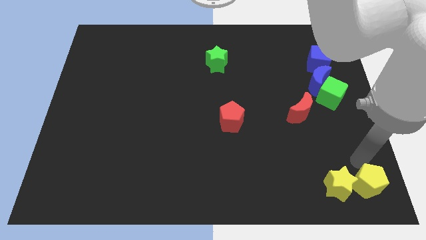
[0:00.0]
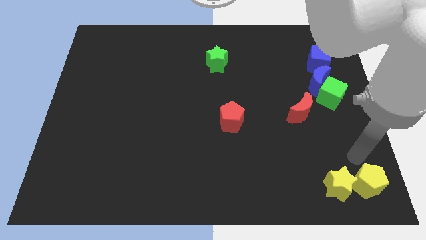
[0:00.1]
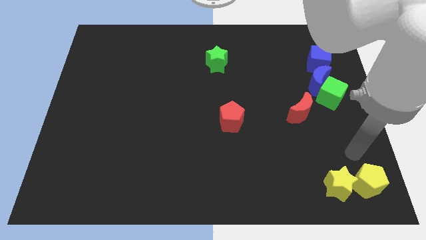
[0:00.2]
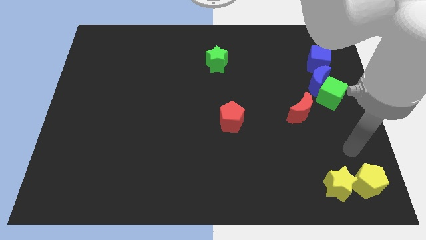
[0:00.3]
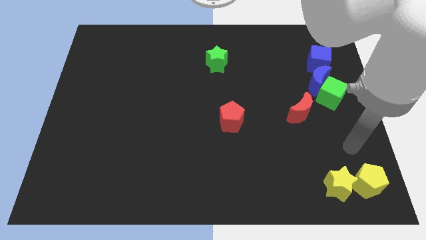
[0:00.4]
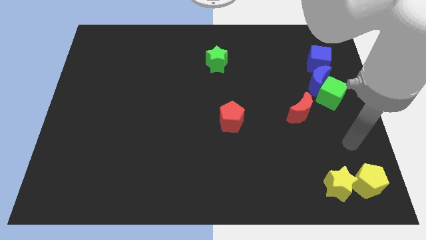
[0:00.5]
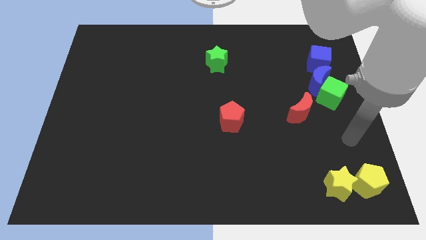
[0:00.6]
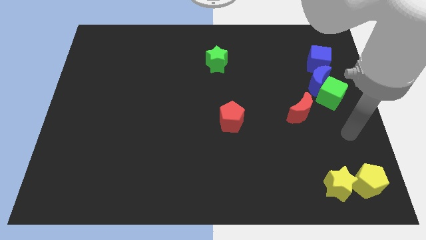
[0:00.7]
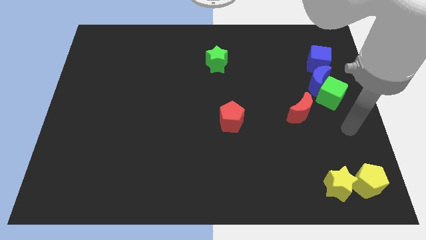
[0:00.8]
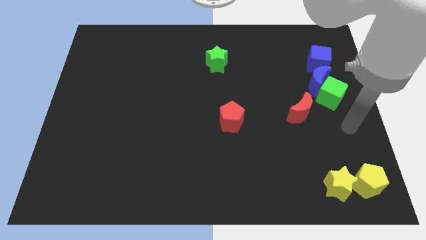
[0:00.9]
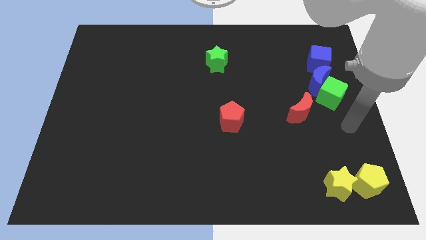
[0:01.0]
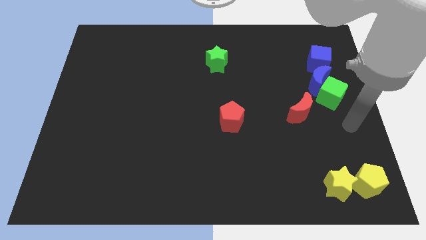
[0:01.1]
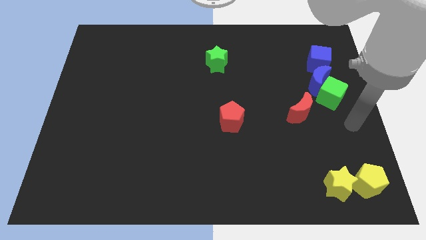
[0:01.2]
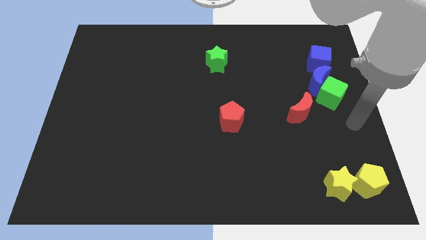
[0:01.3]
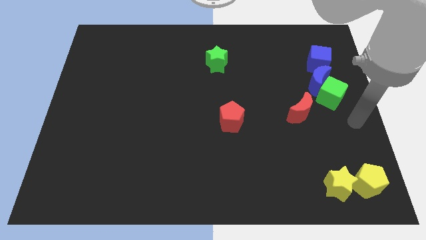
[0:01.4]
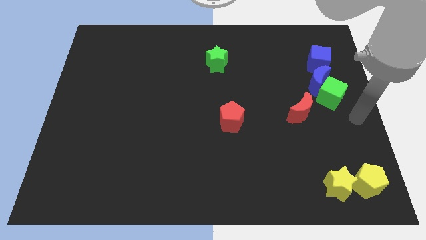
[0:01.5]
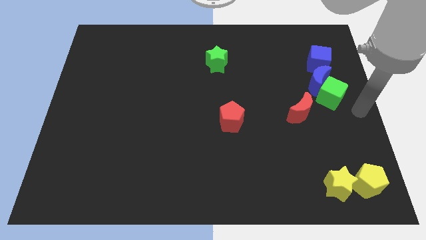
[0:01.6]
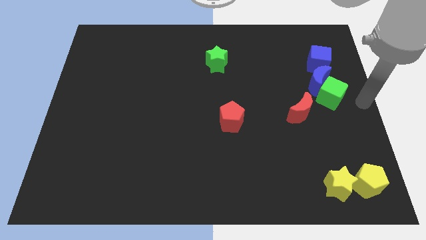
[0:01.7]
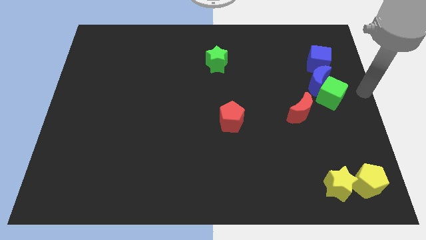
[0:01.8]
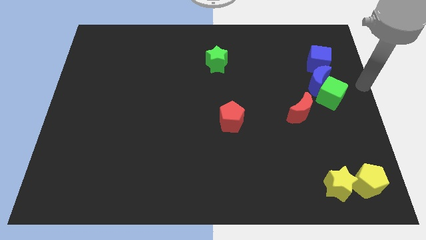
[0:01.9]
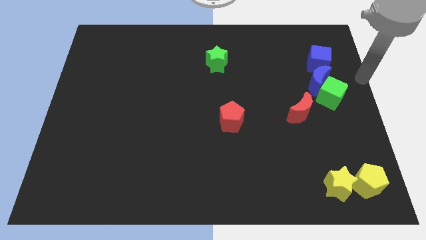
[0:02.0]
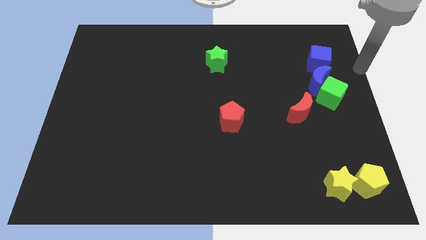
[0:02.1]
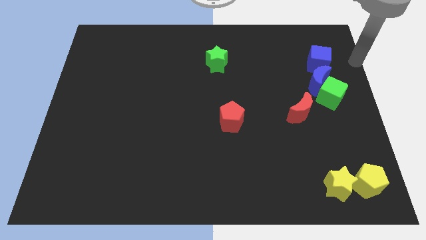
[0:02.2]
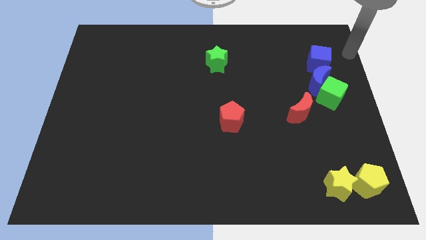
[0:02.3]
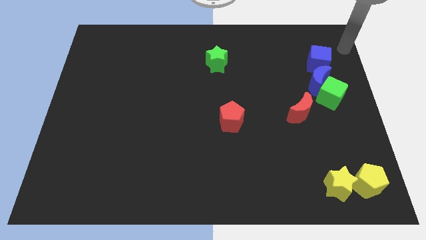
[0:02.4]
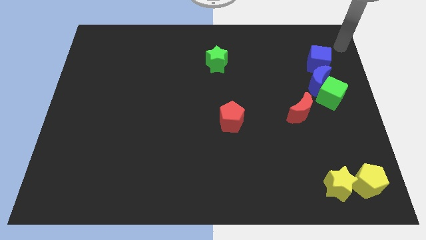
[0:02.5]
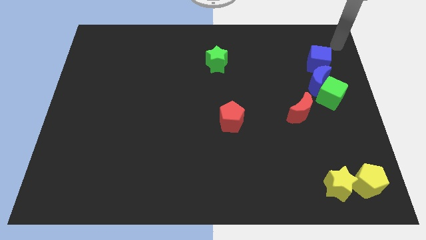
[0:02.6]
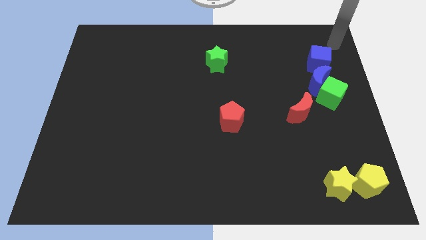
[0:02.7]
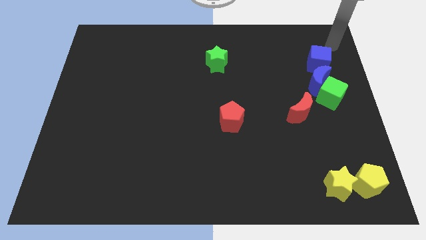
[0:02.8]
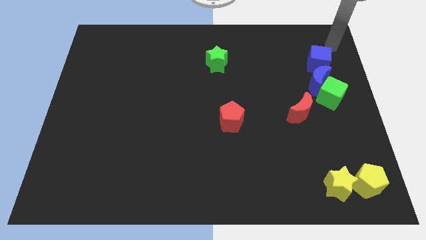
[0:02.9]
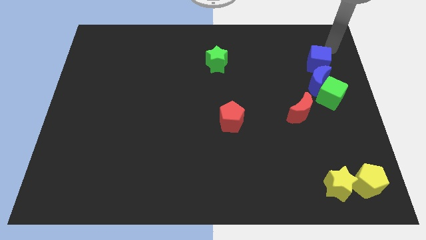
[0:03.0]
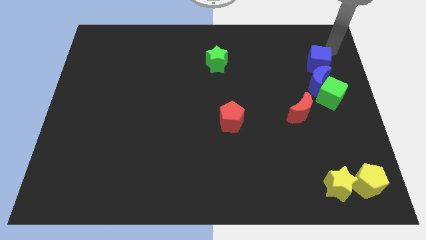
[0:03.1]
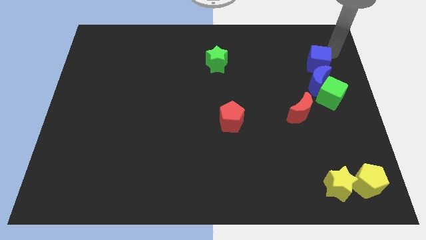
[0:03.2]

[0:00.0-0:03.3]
move your hand to the top right of the blue cube

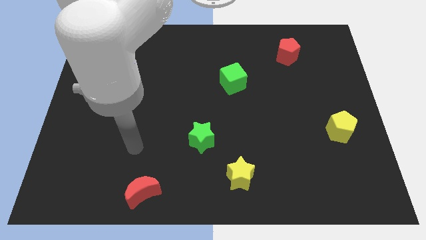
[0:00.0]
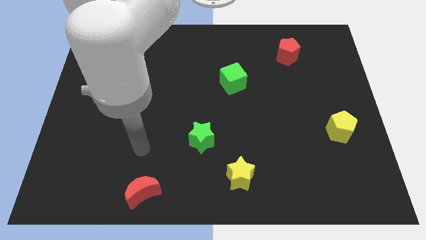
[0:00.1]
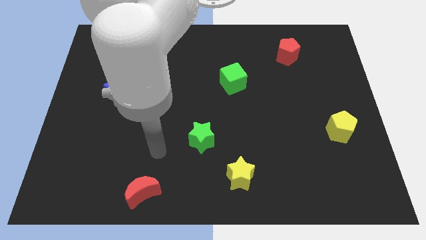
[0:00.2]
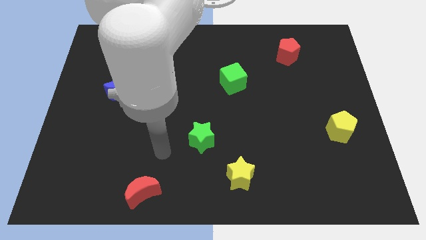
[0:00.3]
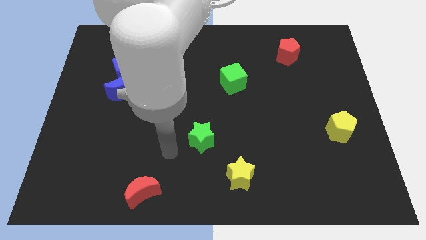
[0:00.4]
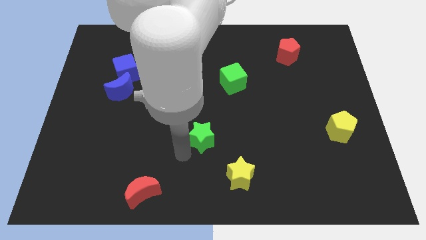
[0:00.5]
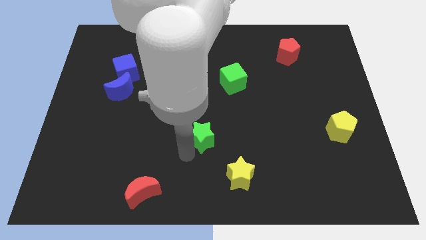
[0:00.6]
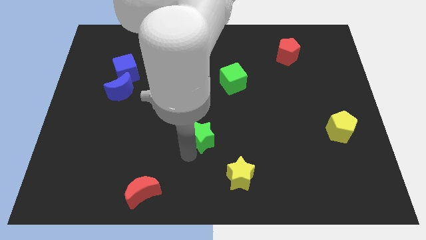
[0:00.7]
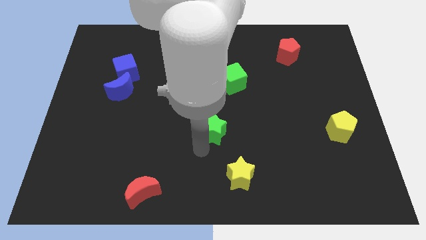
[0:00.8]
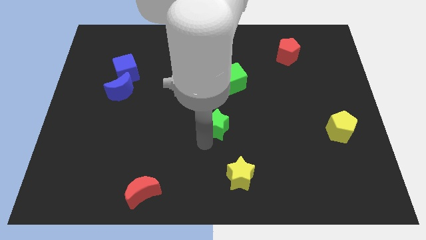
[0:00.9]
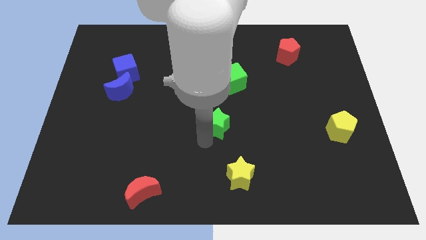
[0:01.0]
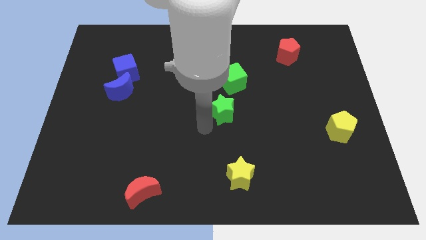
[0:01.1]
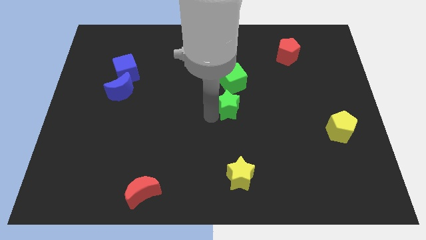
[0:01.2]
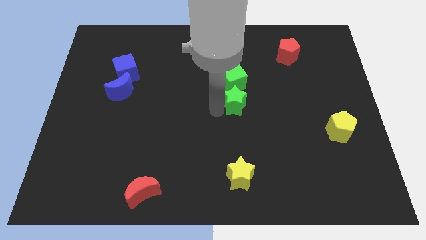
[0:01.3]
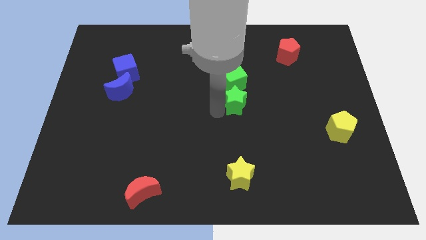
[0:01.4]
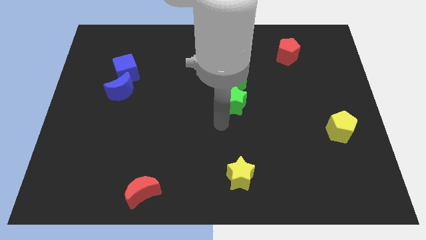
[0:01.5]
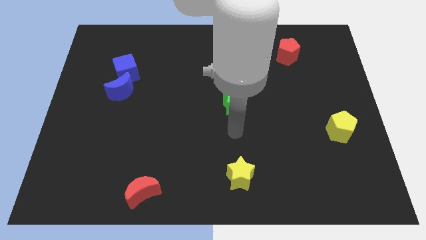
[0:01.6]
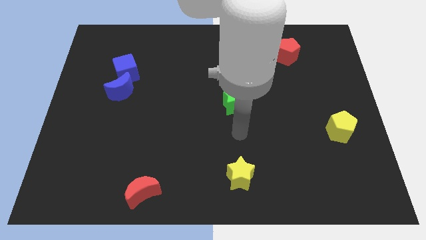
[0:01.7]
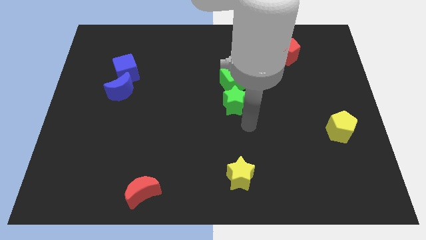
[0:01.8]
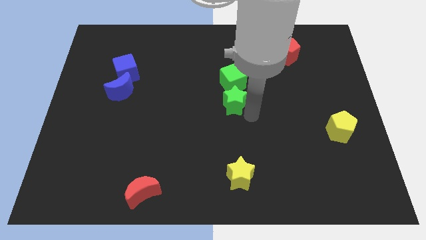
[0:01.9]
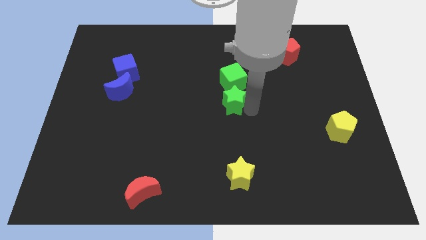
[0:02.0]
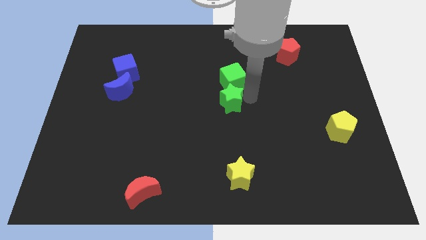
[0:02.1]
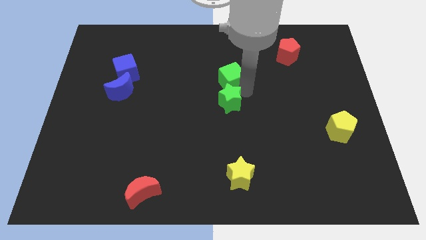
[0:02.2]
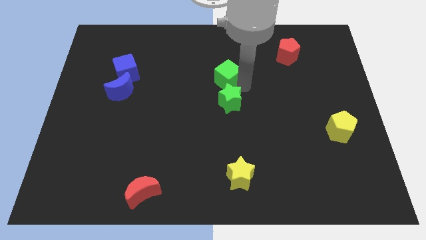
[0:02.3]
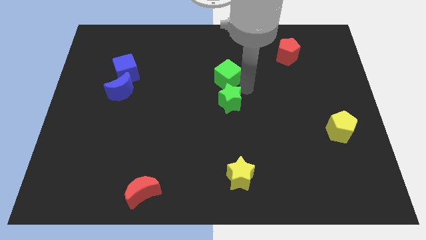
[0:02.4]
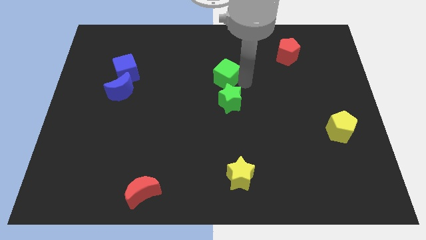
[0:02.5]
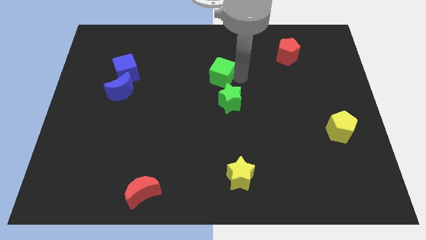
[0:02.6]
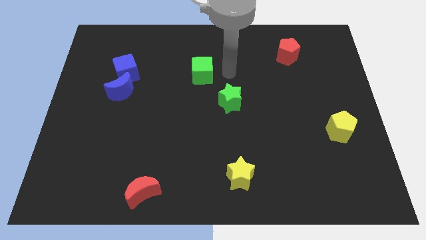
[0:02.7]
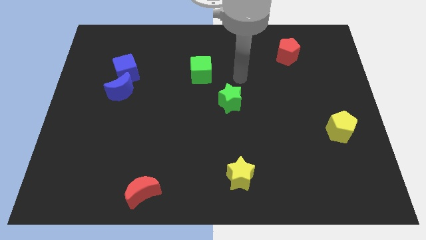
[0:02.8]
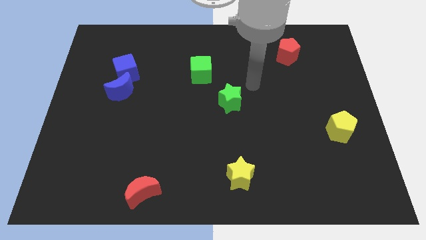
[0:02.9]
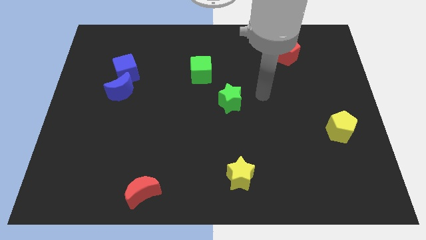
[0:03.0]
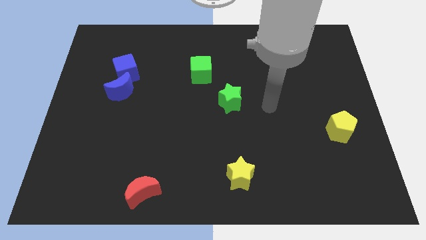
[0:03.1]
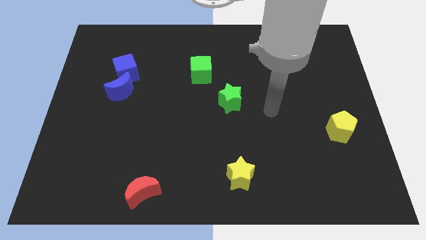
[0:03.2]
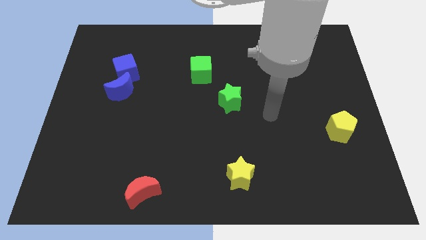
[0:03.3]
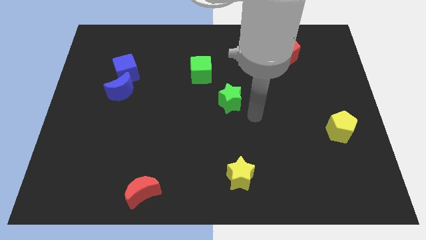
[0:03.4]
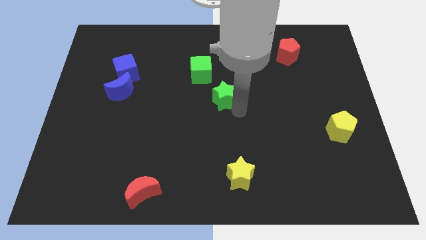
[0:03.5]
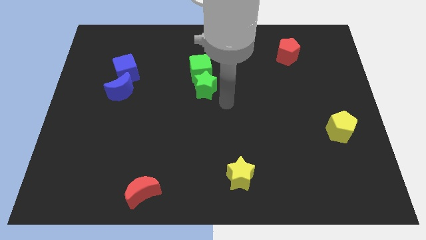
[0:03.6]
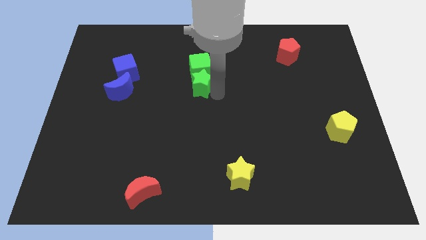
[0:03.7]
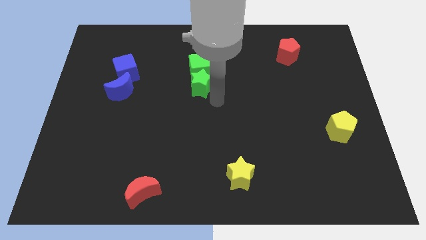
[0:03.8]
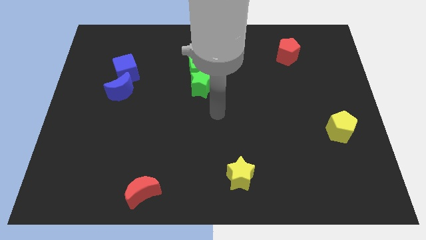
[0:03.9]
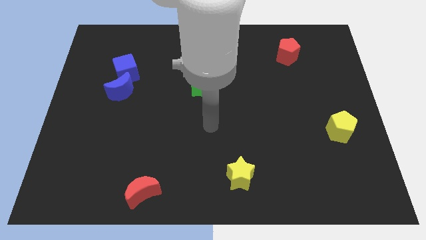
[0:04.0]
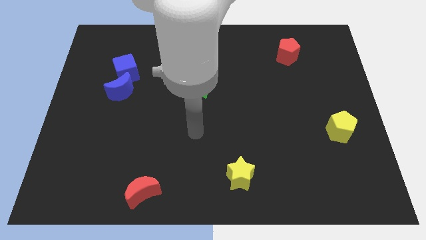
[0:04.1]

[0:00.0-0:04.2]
place the green star bottom to the green cube

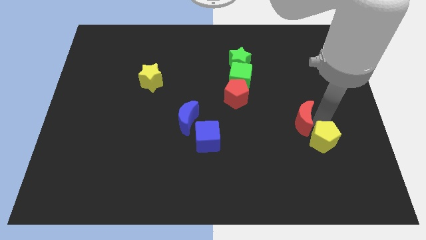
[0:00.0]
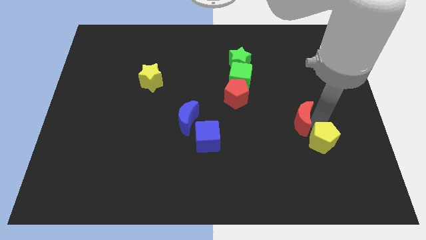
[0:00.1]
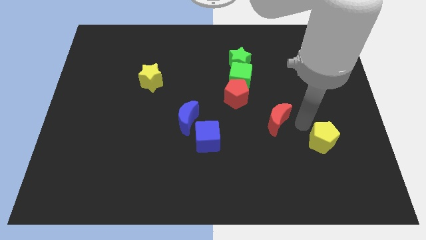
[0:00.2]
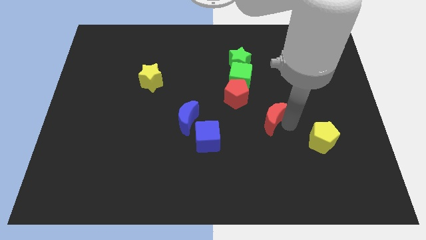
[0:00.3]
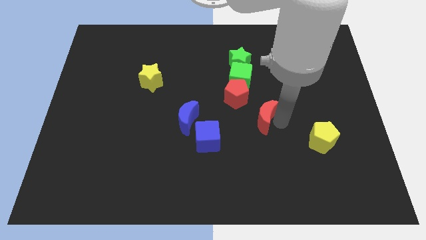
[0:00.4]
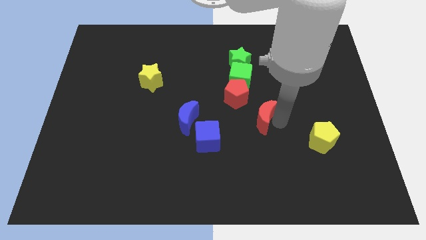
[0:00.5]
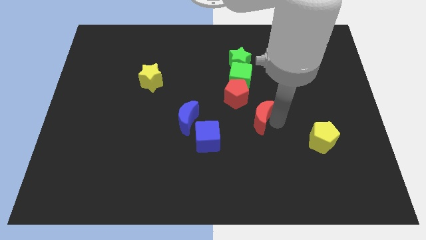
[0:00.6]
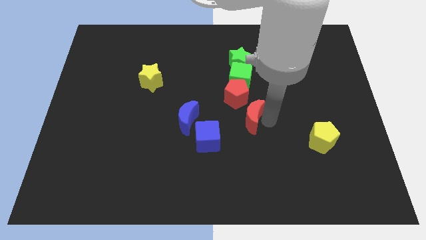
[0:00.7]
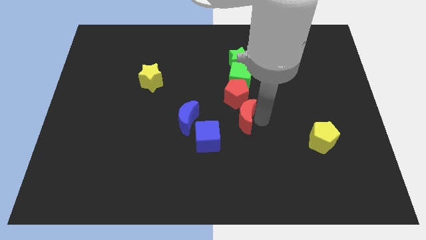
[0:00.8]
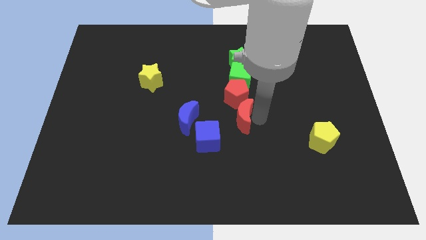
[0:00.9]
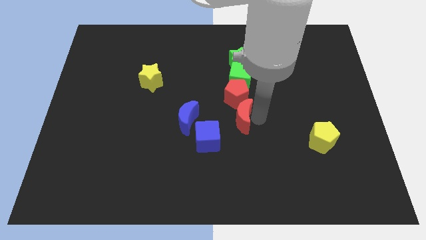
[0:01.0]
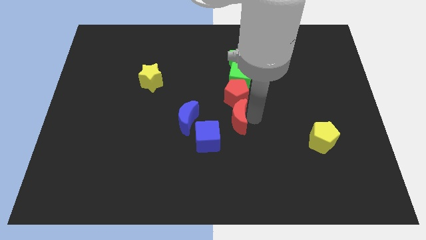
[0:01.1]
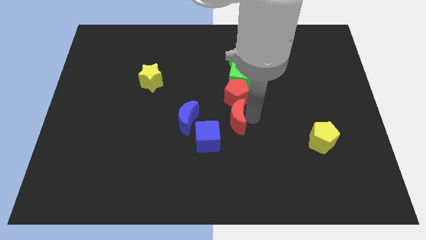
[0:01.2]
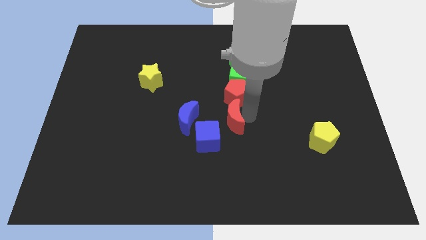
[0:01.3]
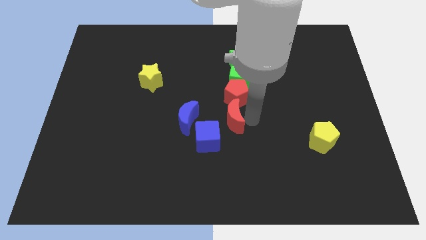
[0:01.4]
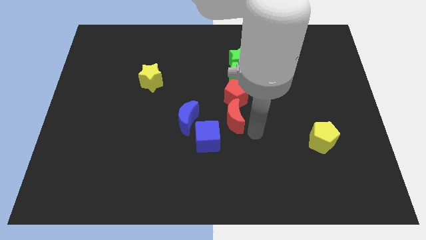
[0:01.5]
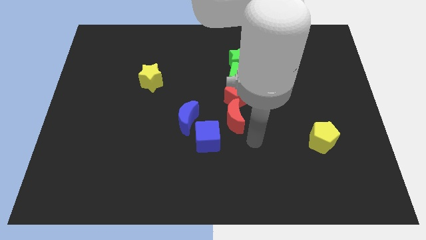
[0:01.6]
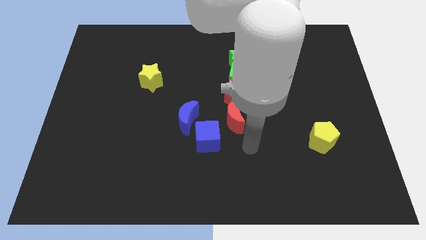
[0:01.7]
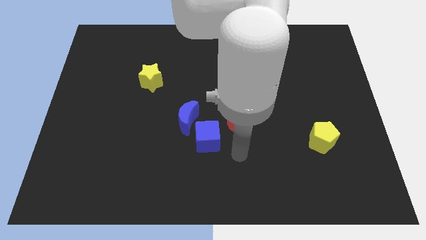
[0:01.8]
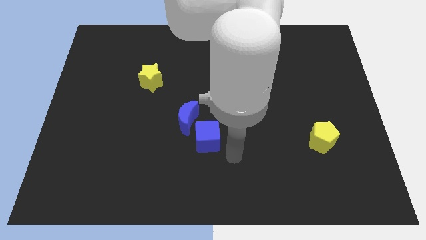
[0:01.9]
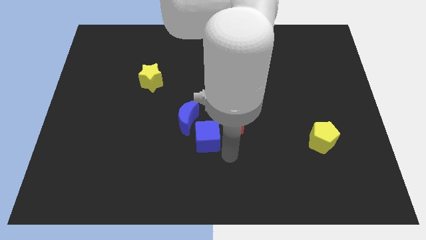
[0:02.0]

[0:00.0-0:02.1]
separate the red moon below towards red pentagon
